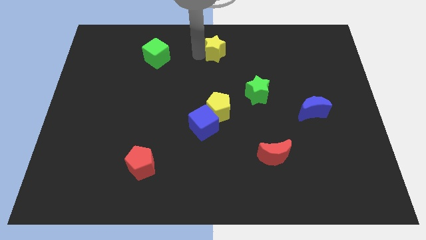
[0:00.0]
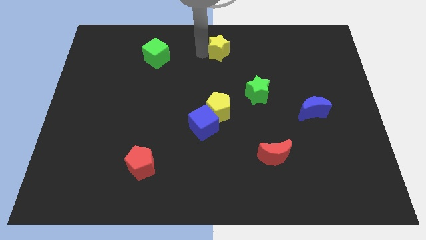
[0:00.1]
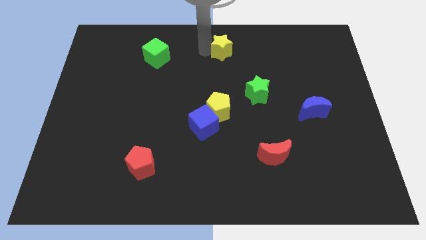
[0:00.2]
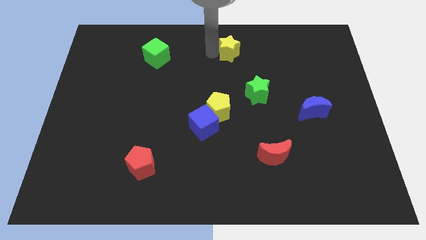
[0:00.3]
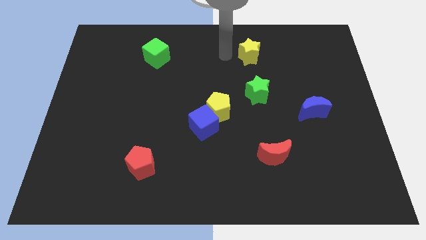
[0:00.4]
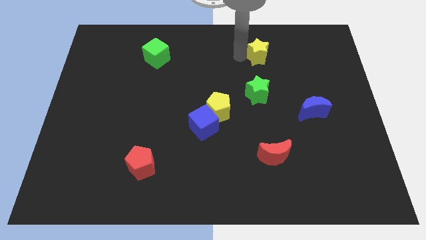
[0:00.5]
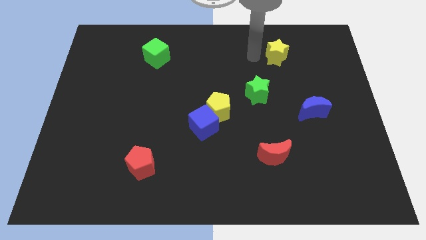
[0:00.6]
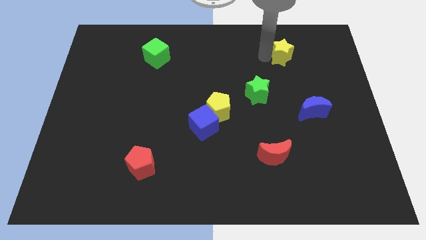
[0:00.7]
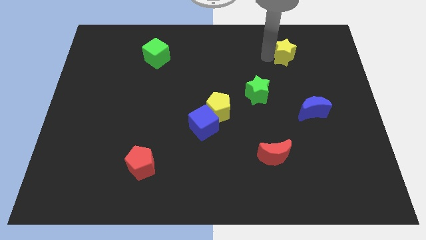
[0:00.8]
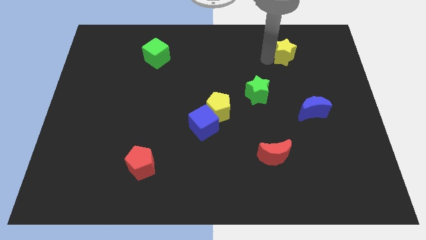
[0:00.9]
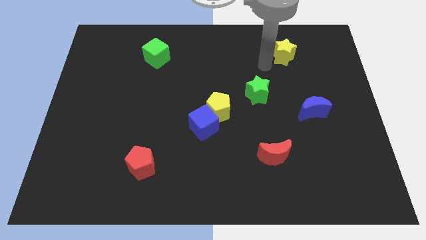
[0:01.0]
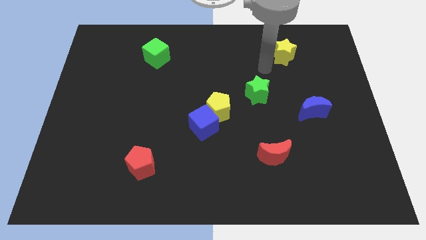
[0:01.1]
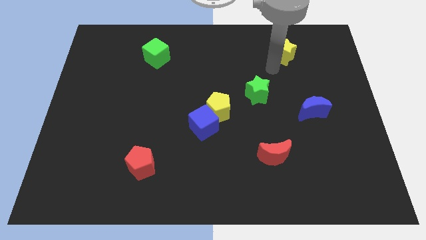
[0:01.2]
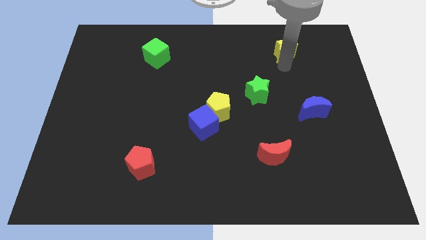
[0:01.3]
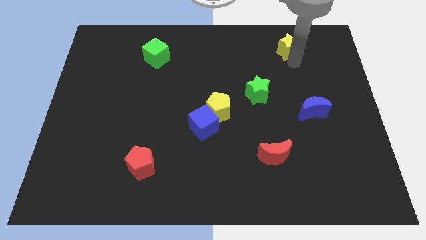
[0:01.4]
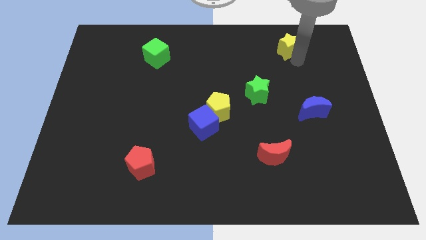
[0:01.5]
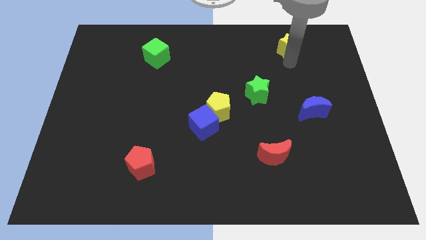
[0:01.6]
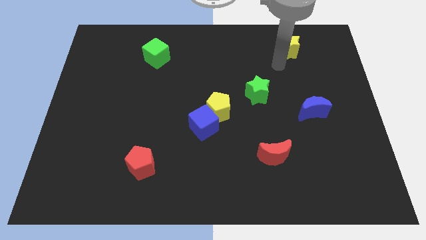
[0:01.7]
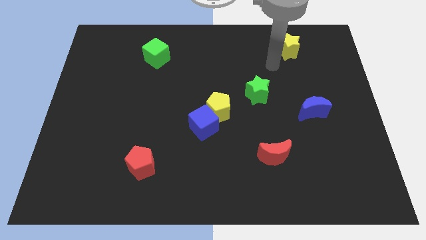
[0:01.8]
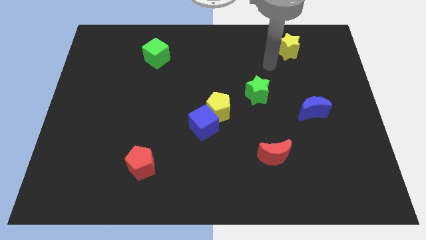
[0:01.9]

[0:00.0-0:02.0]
push the yellow star towards the right corner of the board

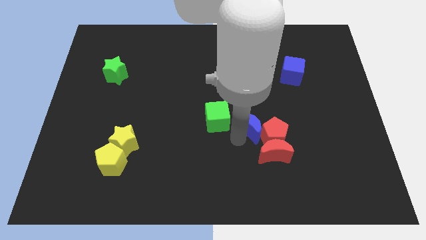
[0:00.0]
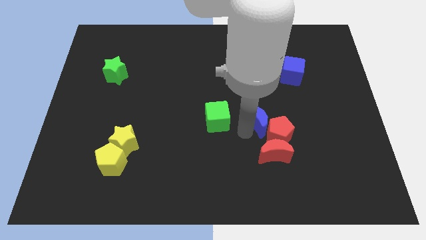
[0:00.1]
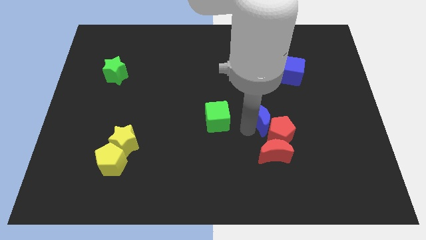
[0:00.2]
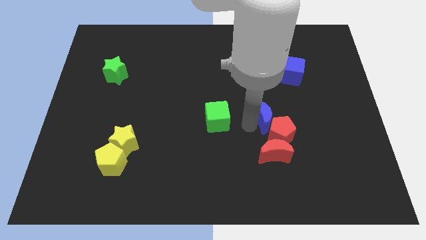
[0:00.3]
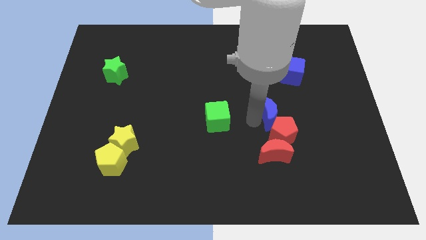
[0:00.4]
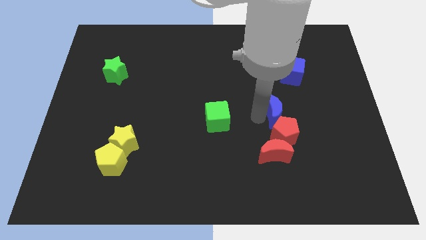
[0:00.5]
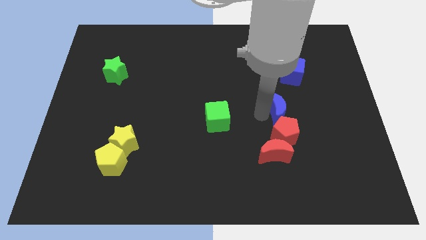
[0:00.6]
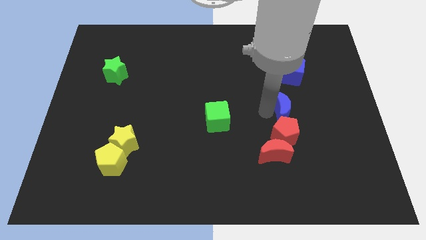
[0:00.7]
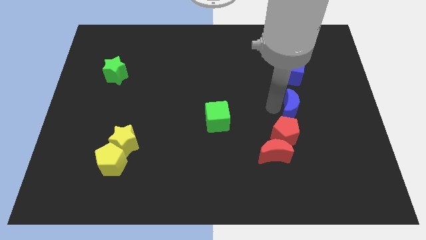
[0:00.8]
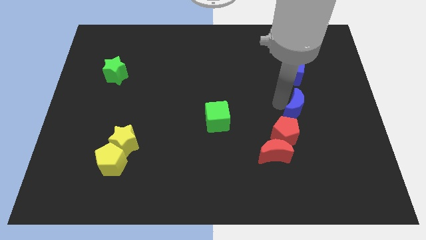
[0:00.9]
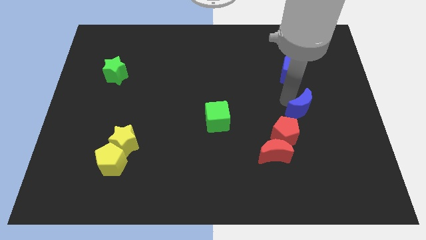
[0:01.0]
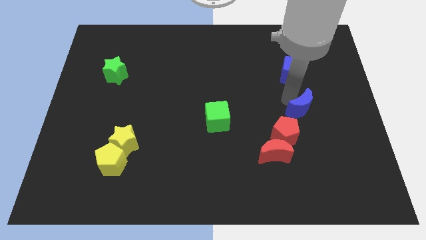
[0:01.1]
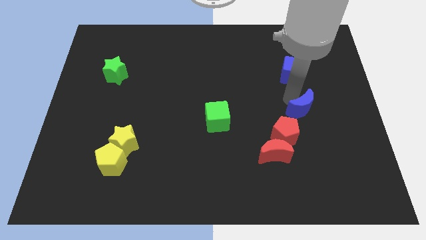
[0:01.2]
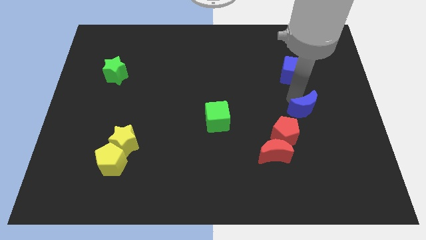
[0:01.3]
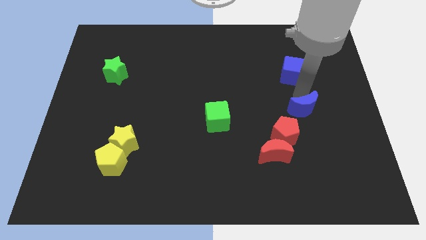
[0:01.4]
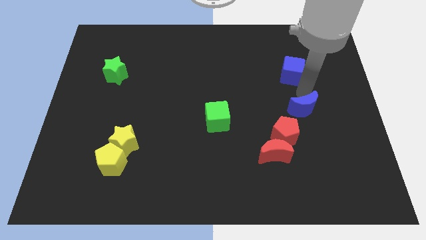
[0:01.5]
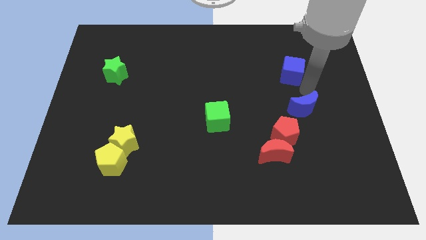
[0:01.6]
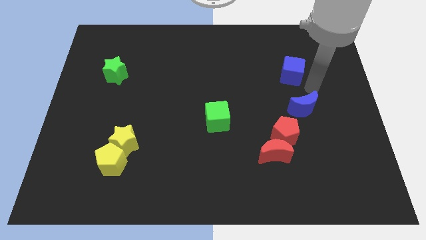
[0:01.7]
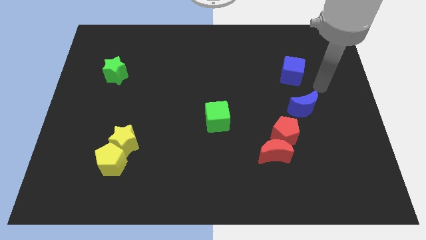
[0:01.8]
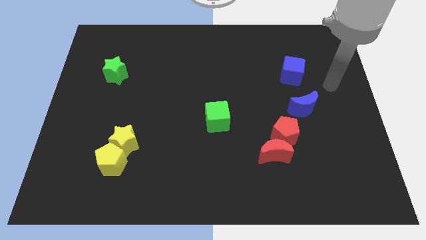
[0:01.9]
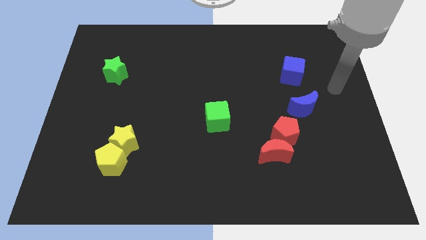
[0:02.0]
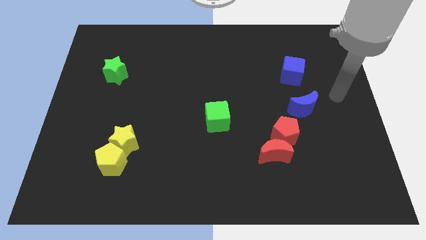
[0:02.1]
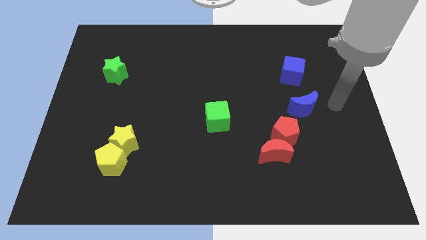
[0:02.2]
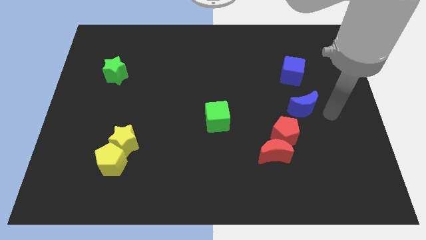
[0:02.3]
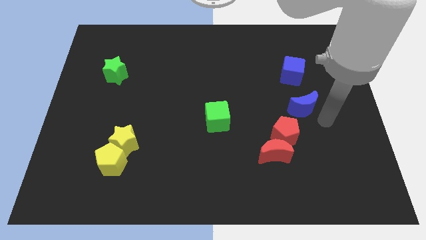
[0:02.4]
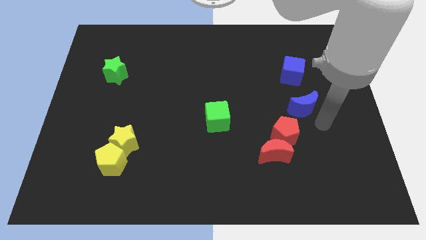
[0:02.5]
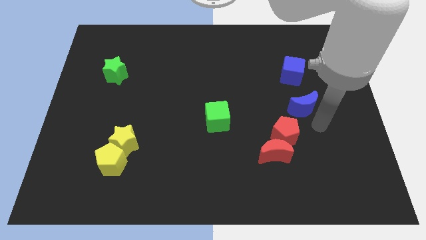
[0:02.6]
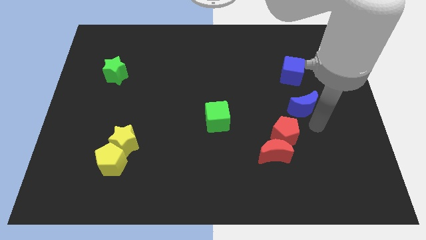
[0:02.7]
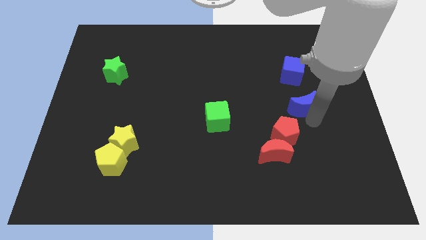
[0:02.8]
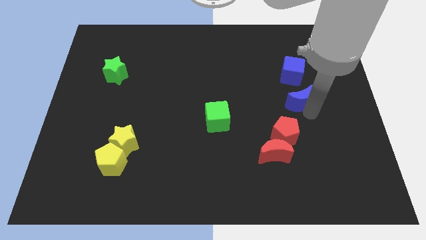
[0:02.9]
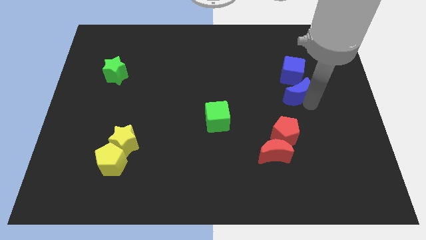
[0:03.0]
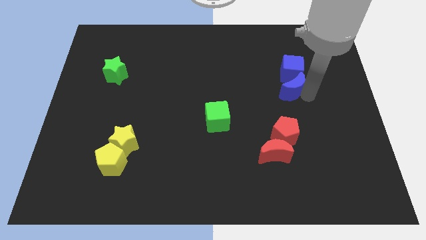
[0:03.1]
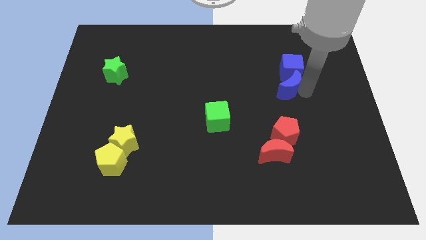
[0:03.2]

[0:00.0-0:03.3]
move the blue crescent towards the bottom to the blue cube

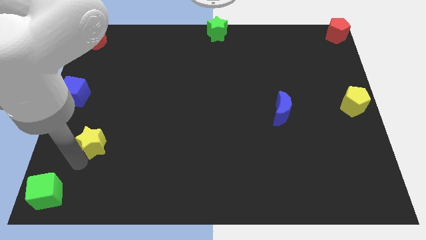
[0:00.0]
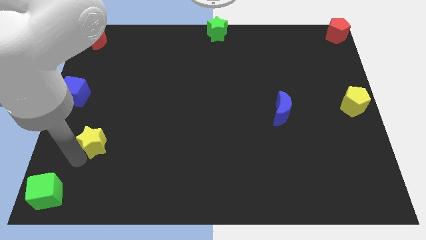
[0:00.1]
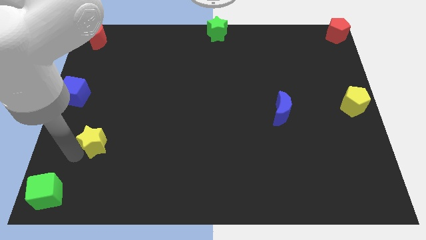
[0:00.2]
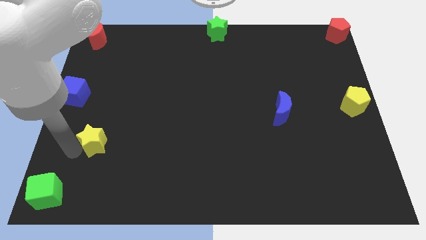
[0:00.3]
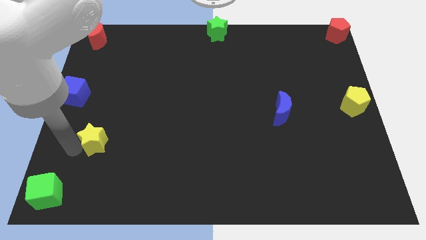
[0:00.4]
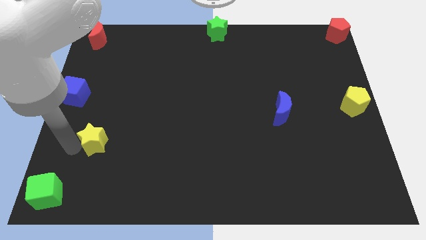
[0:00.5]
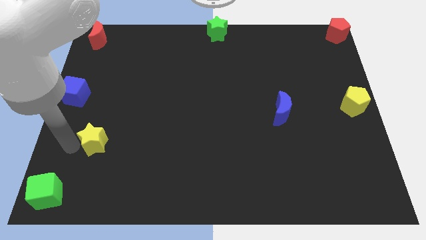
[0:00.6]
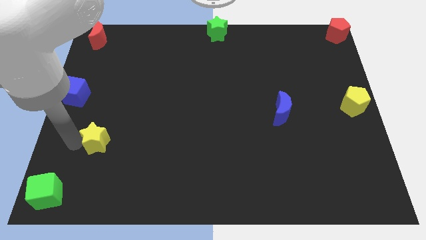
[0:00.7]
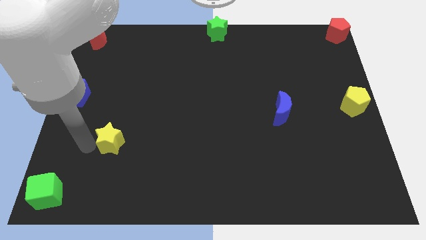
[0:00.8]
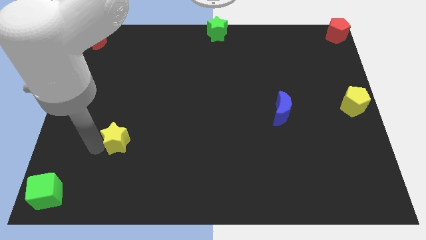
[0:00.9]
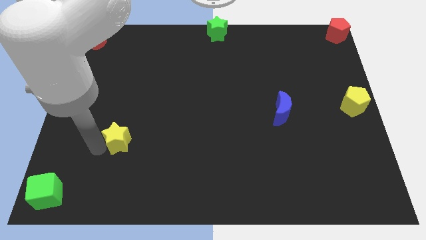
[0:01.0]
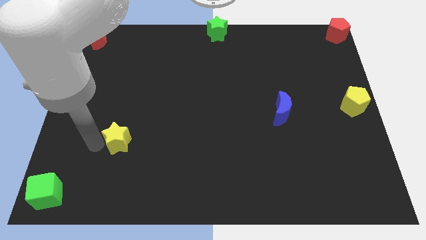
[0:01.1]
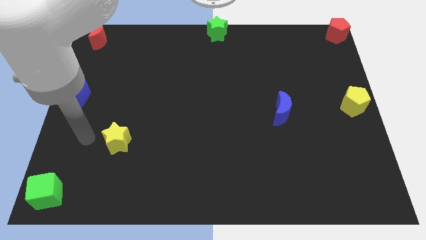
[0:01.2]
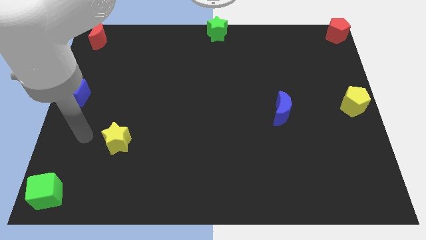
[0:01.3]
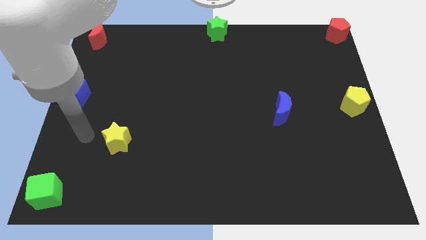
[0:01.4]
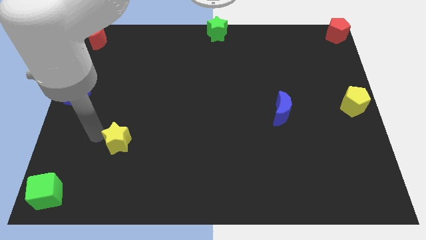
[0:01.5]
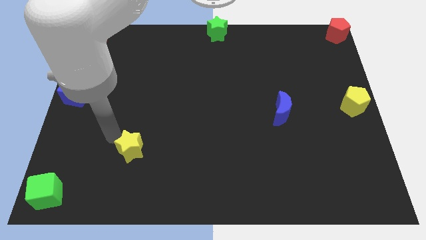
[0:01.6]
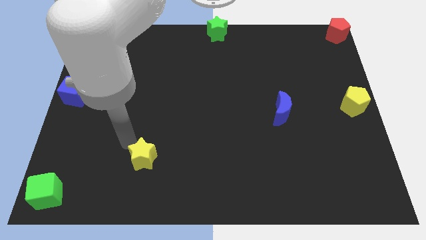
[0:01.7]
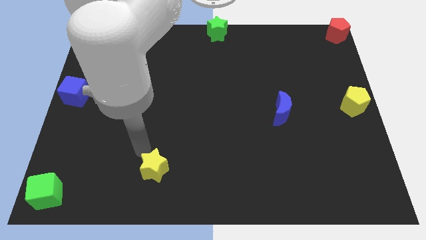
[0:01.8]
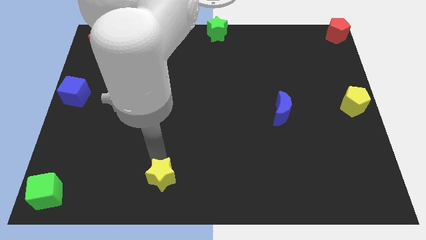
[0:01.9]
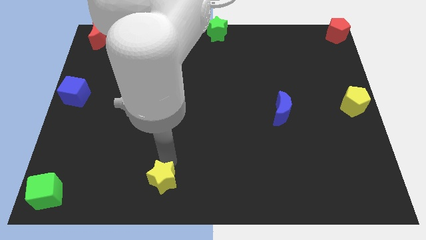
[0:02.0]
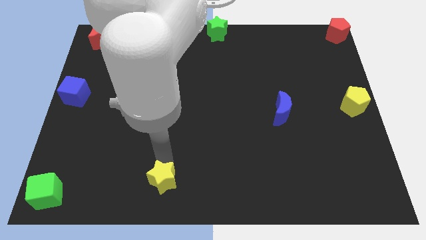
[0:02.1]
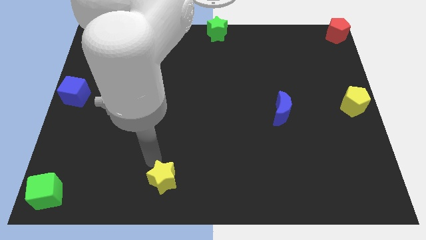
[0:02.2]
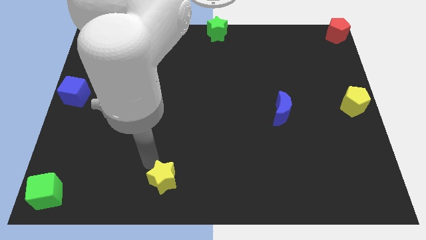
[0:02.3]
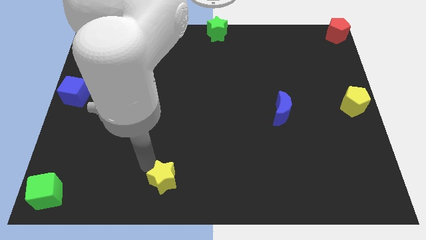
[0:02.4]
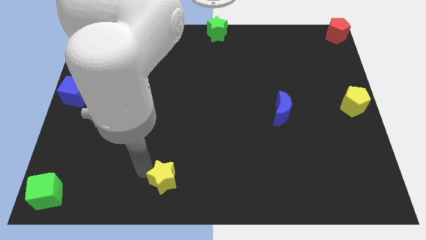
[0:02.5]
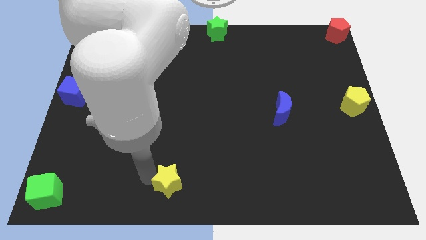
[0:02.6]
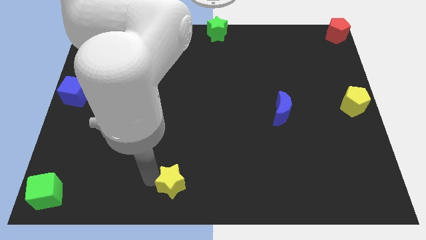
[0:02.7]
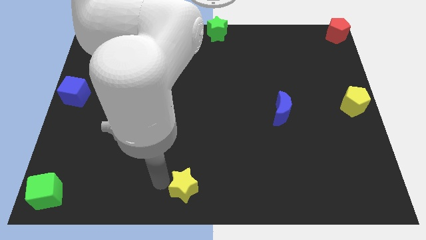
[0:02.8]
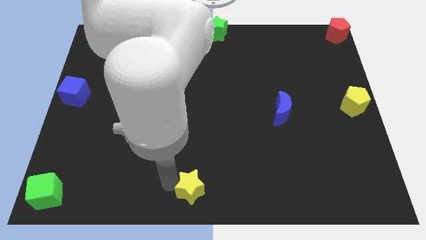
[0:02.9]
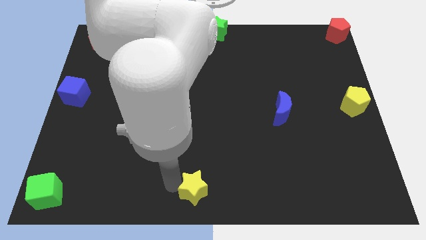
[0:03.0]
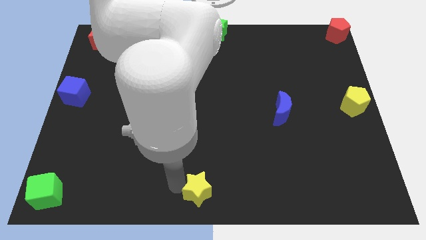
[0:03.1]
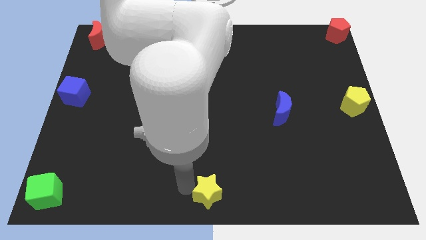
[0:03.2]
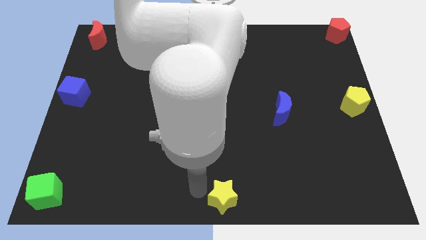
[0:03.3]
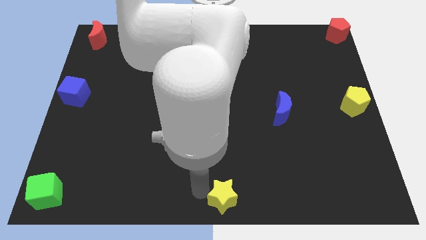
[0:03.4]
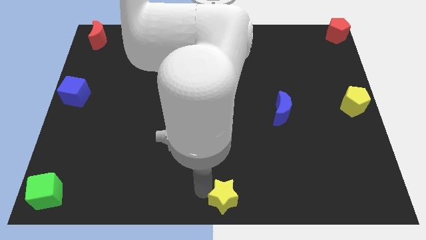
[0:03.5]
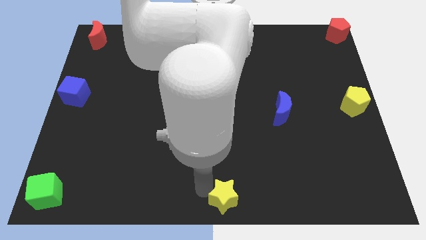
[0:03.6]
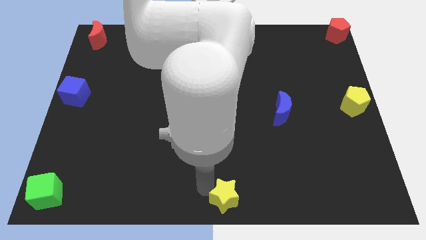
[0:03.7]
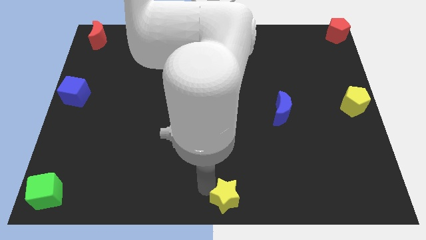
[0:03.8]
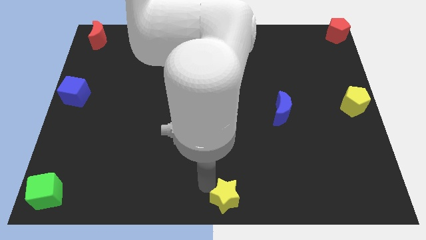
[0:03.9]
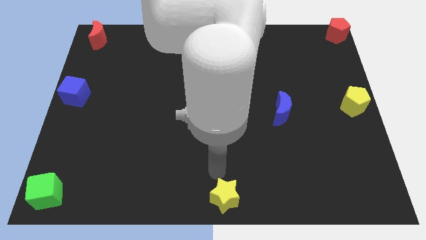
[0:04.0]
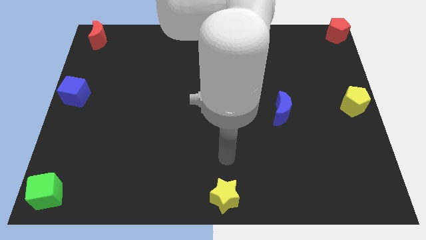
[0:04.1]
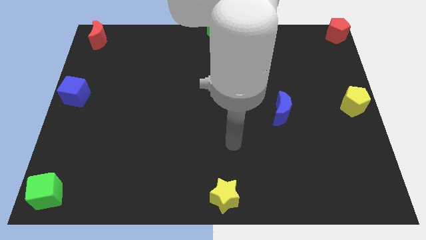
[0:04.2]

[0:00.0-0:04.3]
move the yellow star to the bottom center of the board
